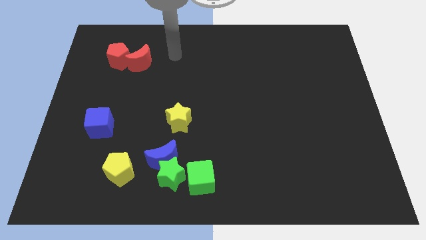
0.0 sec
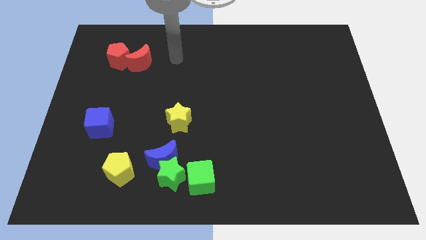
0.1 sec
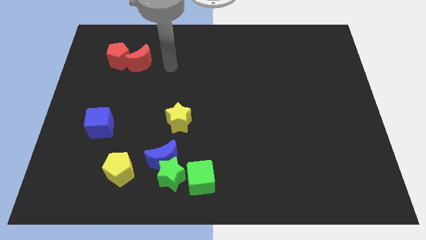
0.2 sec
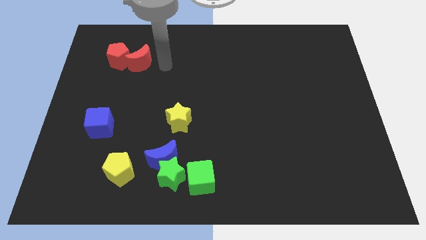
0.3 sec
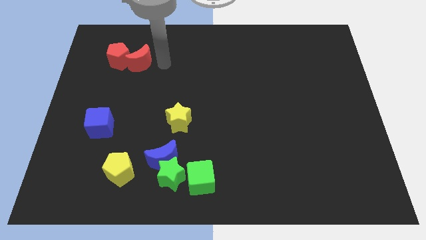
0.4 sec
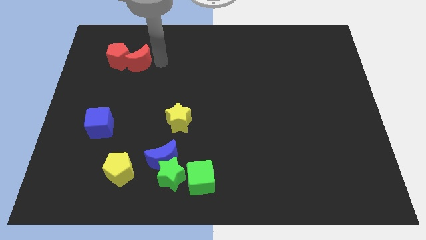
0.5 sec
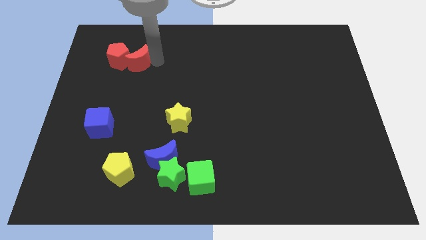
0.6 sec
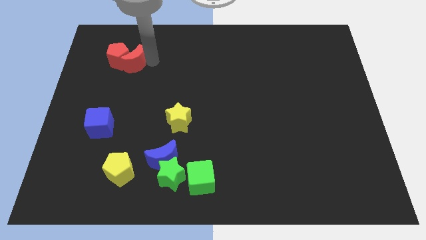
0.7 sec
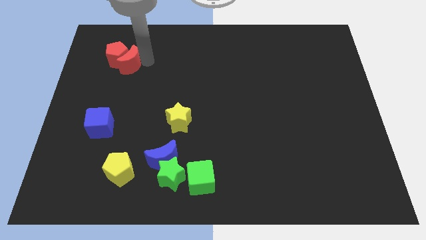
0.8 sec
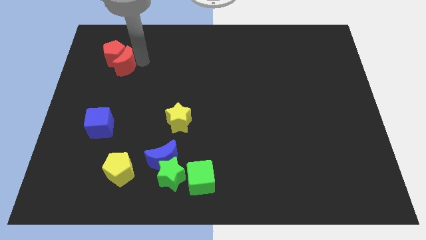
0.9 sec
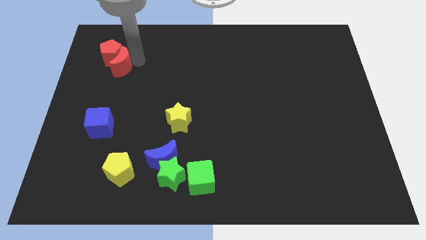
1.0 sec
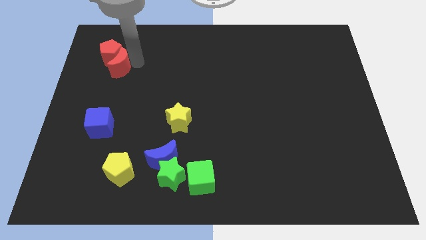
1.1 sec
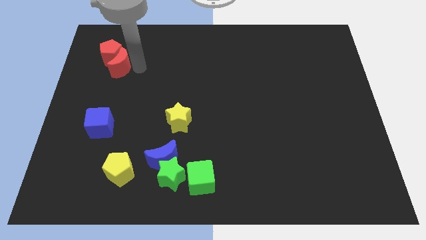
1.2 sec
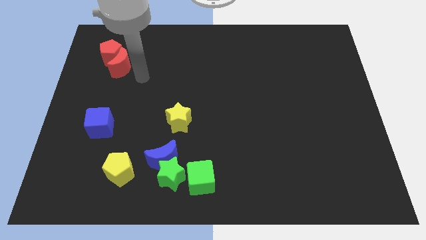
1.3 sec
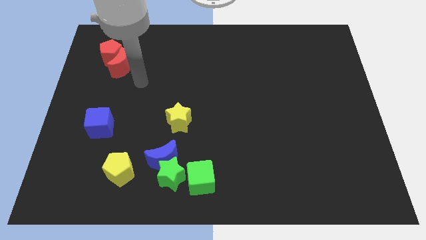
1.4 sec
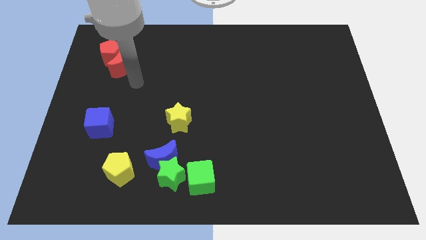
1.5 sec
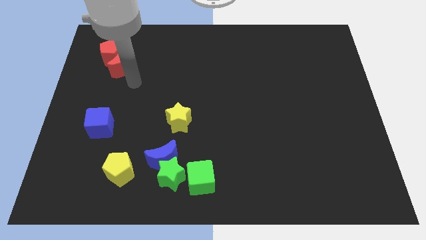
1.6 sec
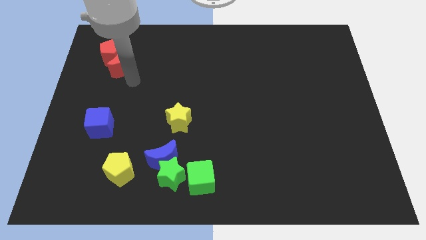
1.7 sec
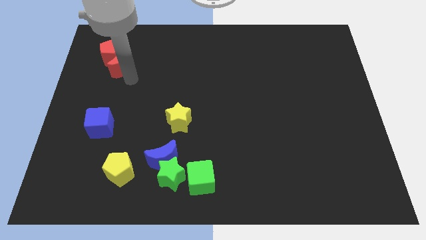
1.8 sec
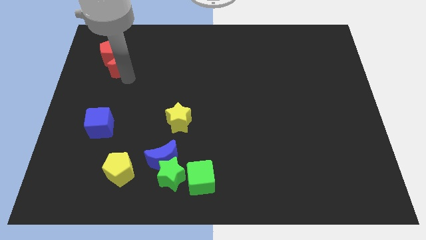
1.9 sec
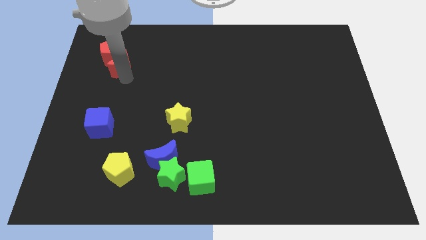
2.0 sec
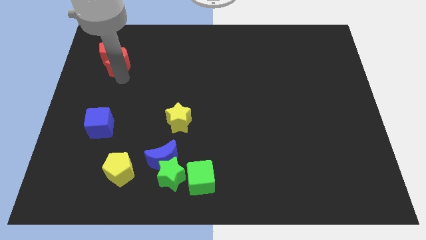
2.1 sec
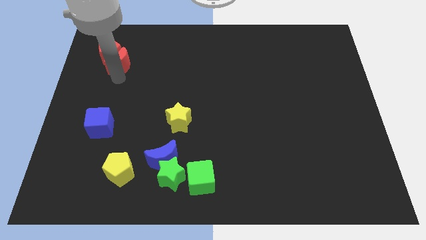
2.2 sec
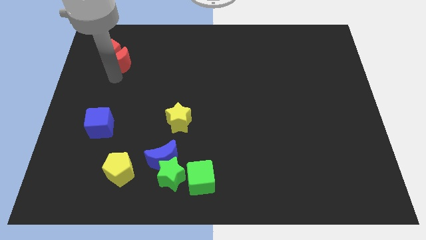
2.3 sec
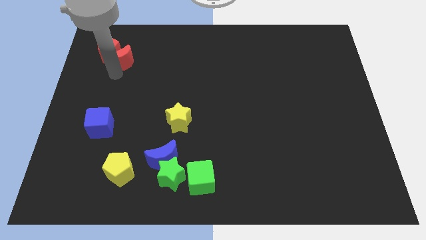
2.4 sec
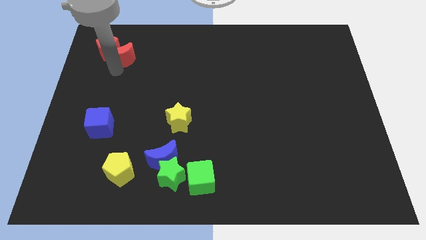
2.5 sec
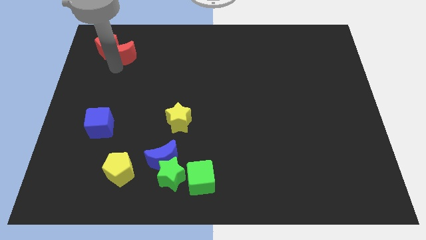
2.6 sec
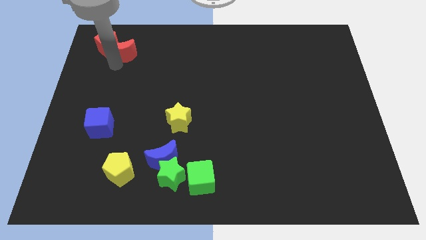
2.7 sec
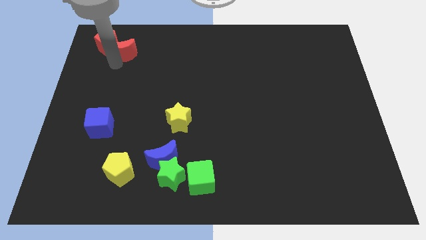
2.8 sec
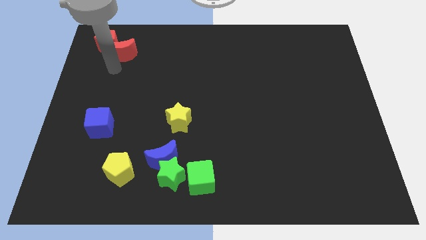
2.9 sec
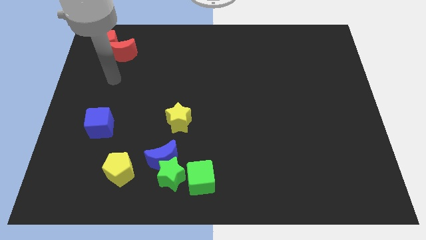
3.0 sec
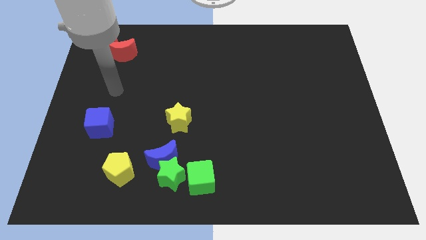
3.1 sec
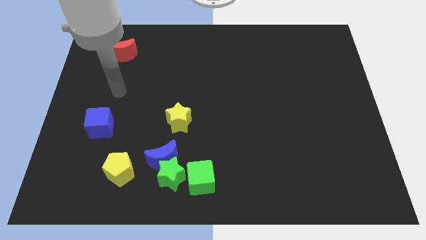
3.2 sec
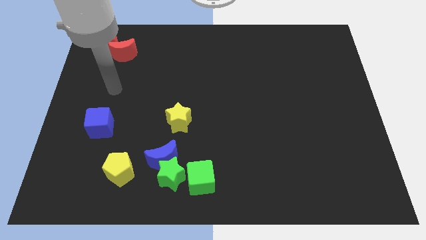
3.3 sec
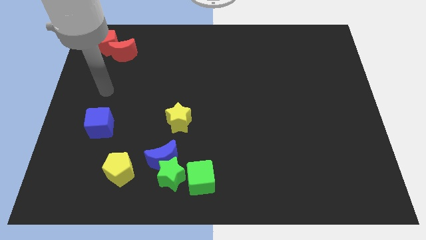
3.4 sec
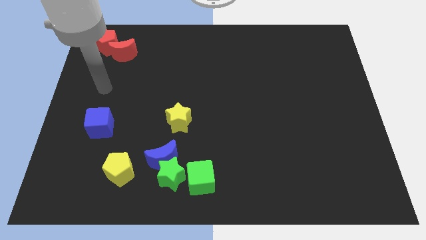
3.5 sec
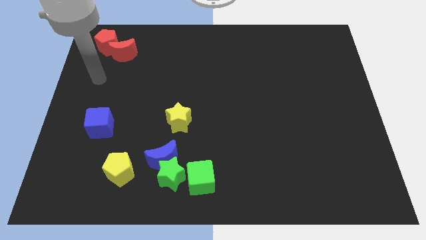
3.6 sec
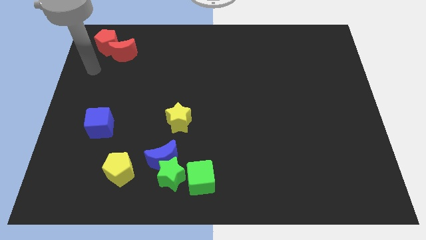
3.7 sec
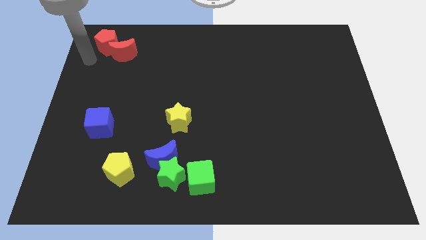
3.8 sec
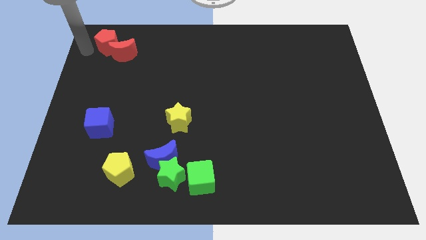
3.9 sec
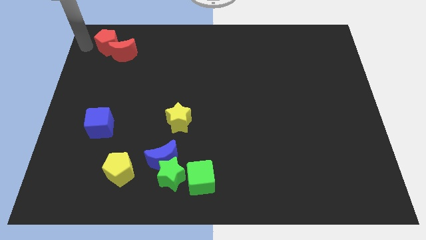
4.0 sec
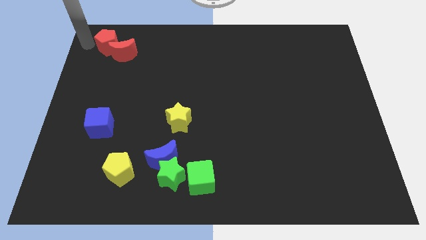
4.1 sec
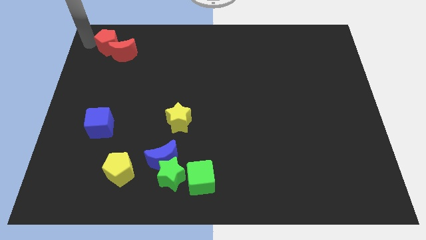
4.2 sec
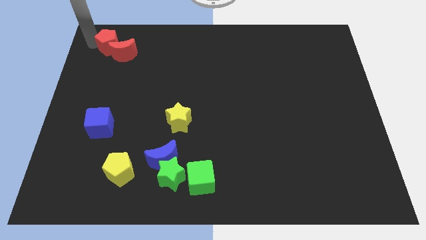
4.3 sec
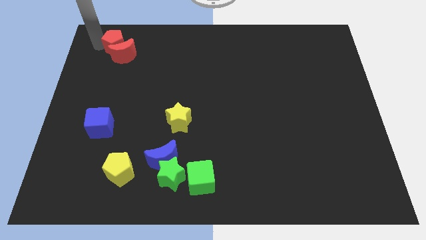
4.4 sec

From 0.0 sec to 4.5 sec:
move red blocks slightly to the top side of the board

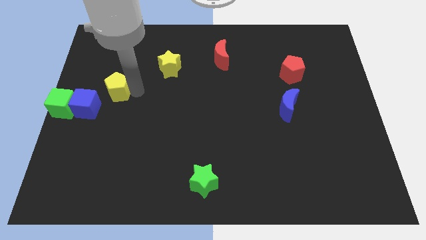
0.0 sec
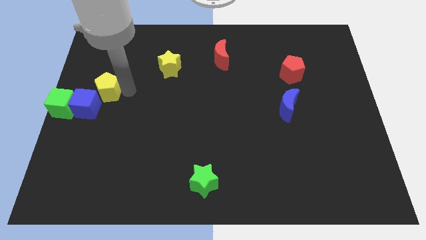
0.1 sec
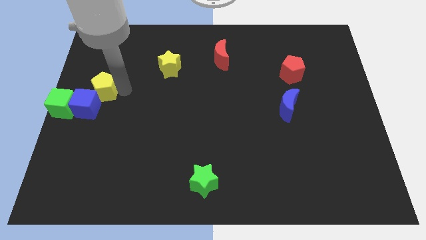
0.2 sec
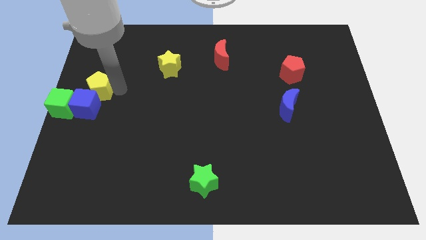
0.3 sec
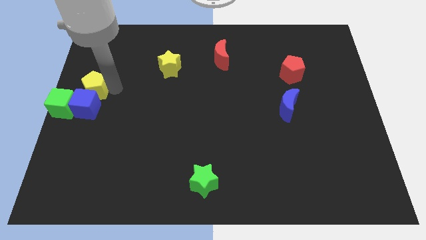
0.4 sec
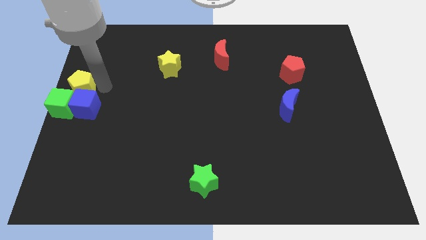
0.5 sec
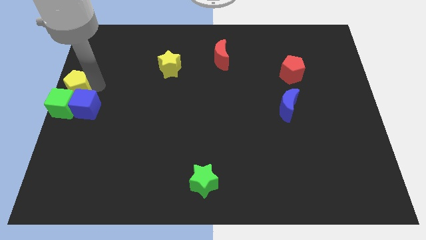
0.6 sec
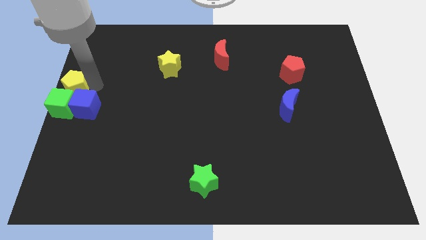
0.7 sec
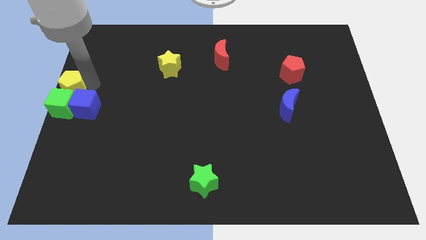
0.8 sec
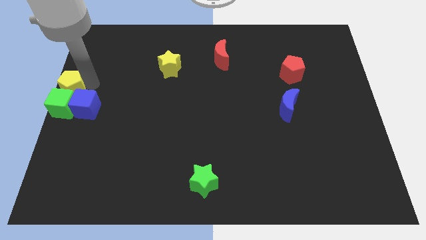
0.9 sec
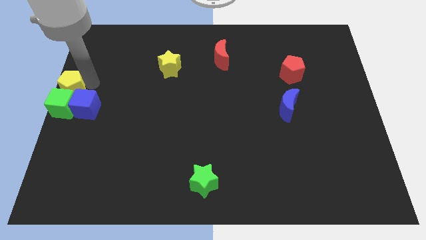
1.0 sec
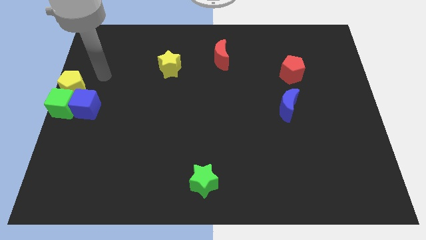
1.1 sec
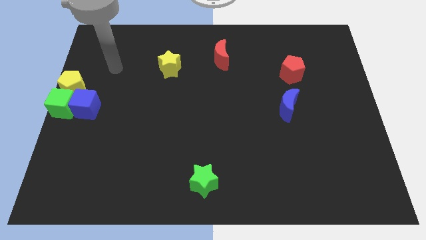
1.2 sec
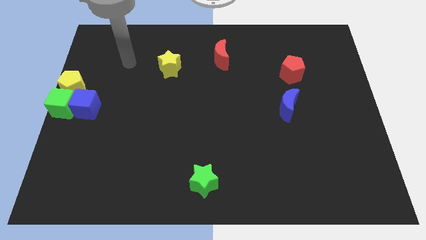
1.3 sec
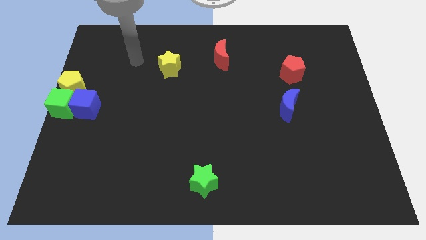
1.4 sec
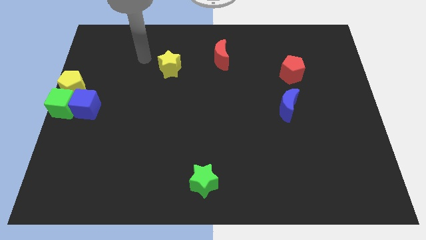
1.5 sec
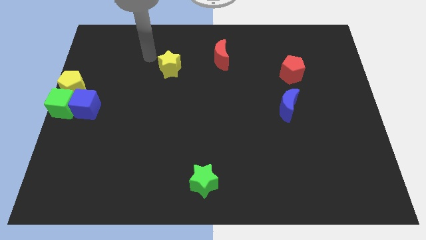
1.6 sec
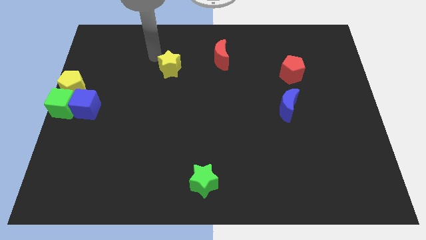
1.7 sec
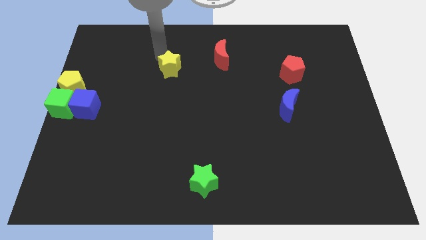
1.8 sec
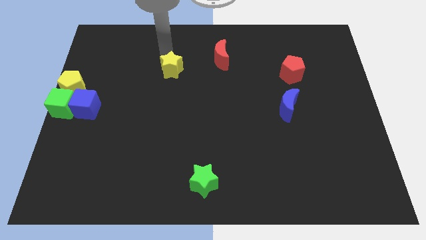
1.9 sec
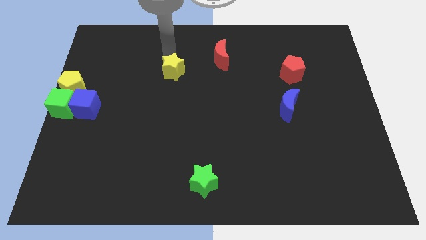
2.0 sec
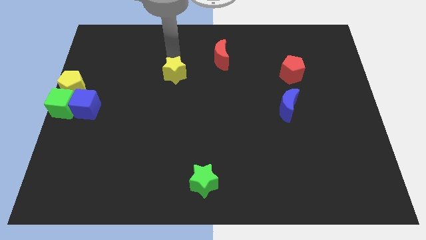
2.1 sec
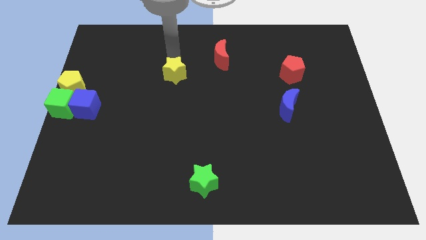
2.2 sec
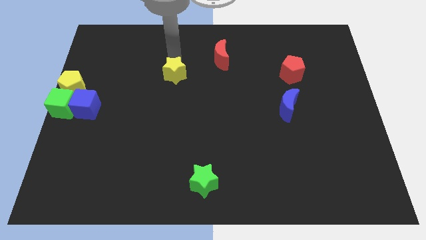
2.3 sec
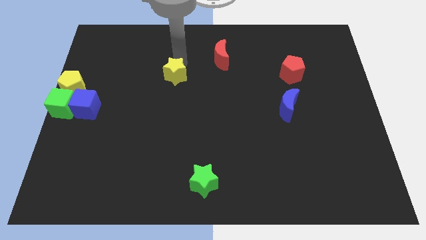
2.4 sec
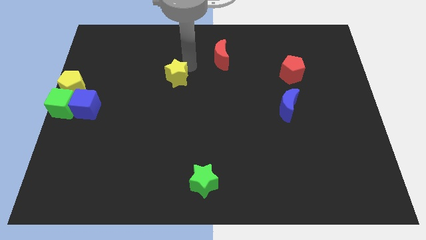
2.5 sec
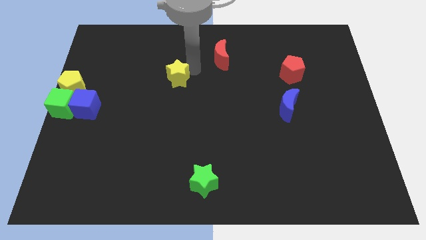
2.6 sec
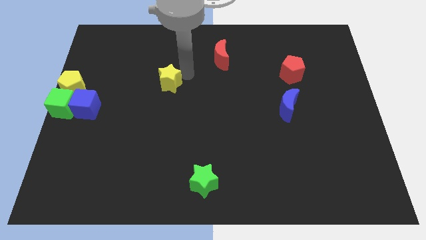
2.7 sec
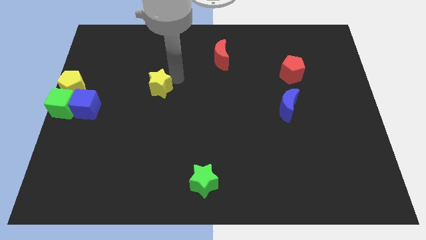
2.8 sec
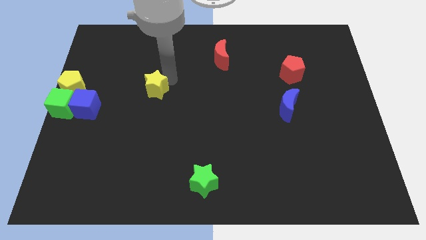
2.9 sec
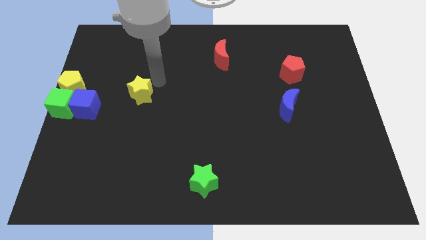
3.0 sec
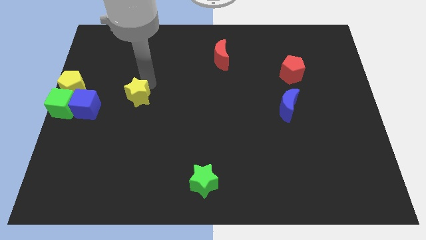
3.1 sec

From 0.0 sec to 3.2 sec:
place the yellow star diagonally top right to the blue cube

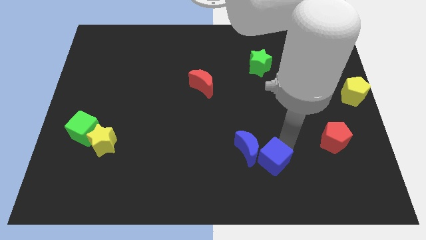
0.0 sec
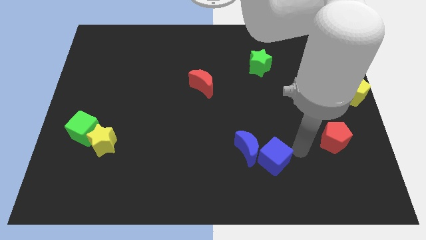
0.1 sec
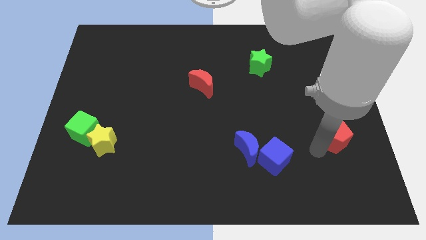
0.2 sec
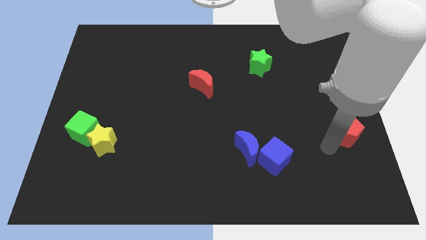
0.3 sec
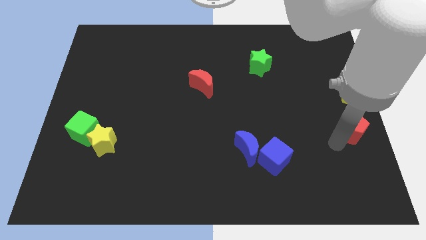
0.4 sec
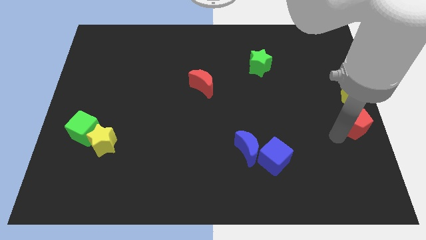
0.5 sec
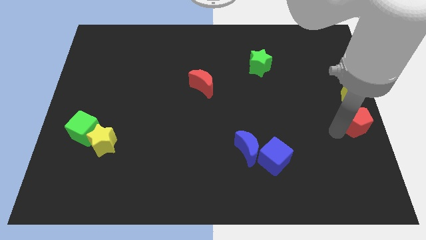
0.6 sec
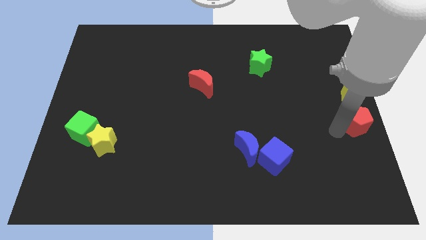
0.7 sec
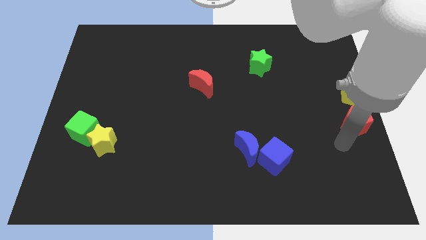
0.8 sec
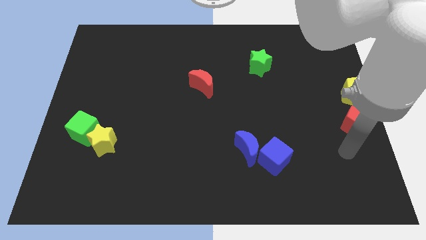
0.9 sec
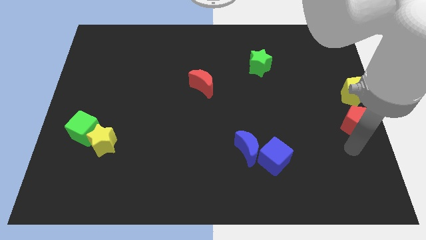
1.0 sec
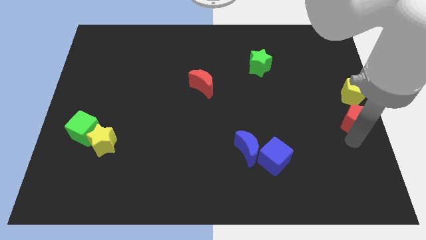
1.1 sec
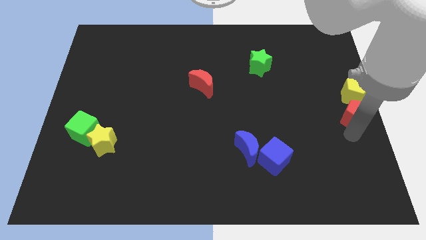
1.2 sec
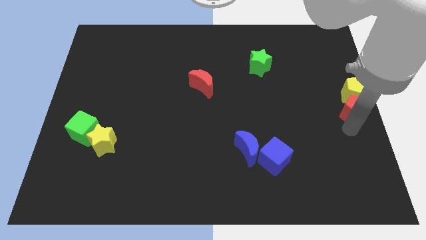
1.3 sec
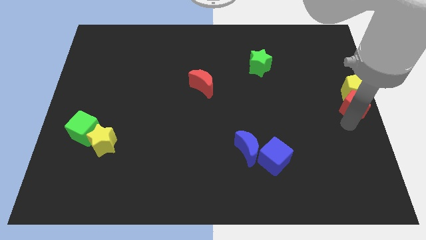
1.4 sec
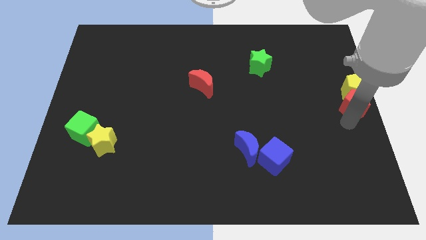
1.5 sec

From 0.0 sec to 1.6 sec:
move the red pentagon into the yellow pentagon
